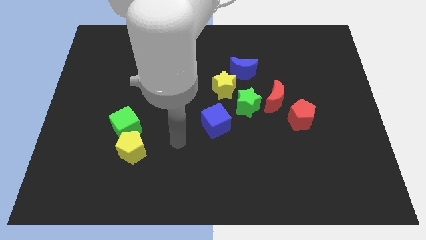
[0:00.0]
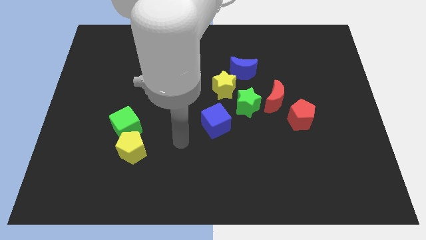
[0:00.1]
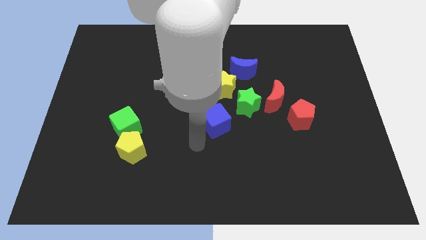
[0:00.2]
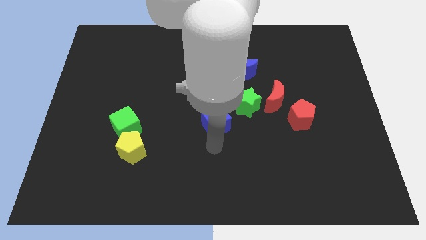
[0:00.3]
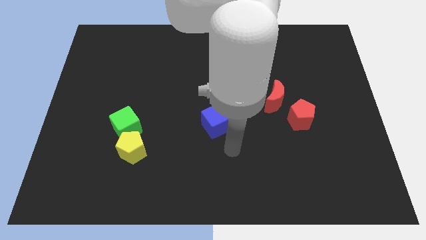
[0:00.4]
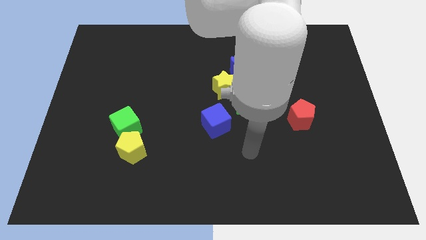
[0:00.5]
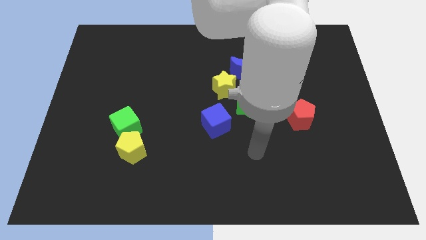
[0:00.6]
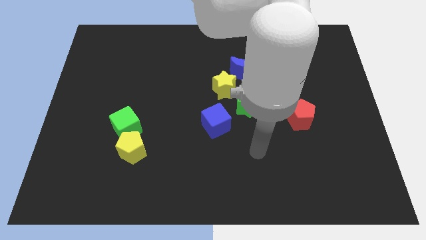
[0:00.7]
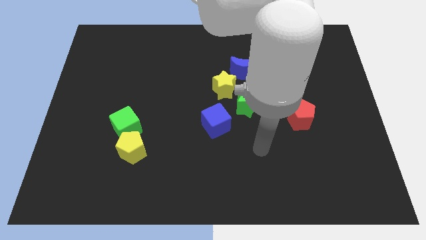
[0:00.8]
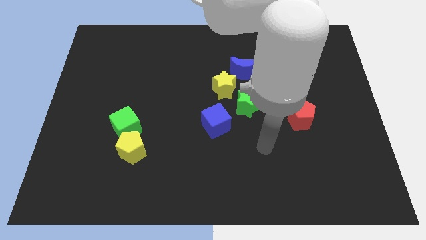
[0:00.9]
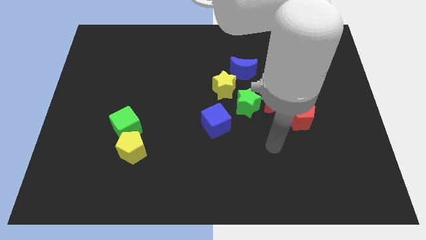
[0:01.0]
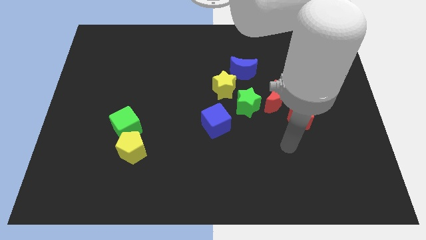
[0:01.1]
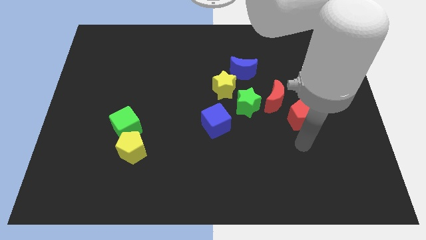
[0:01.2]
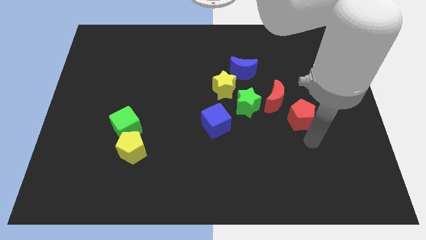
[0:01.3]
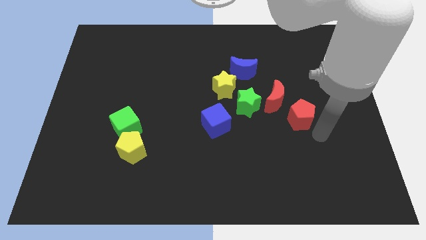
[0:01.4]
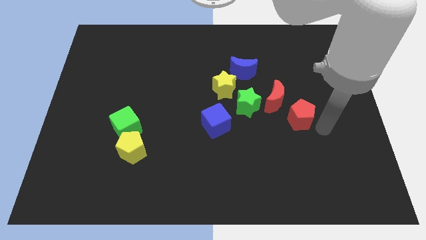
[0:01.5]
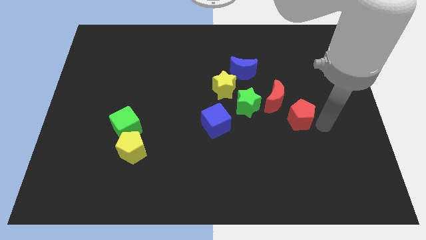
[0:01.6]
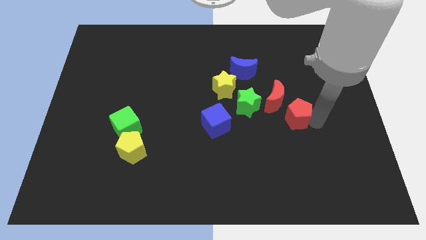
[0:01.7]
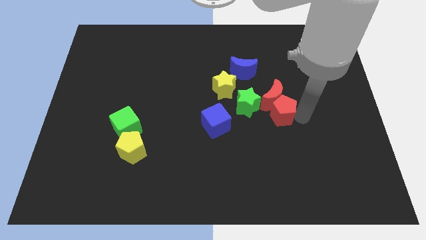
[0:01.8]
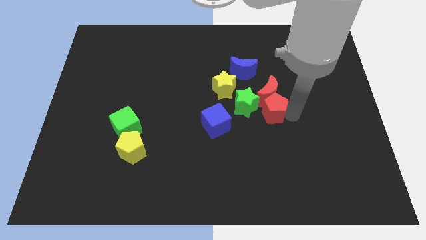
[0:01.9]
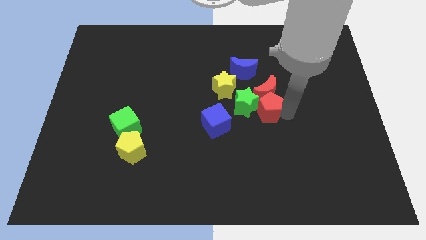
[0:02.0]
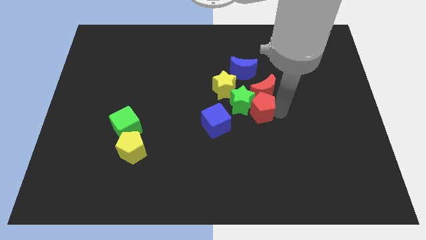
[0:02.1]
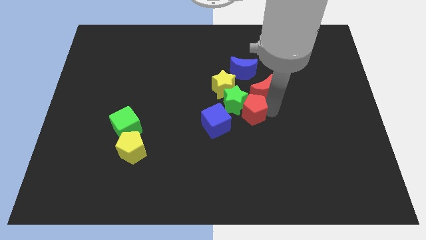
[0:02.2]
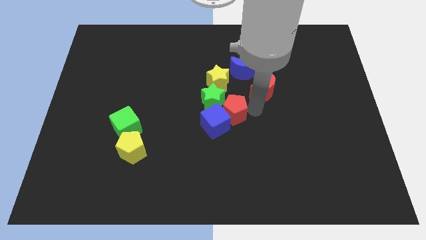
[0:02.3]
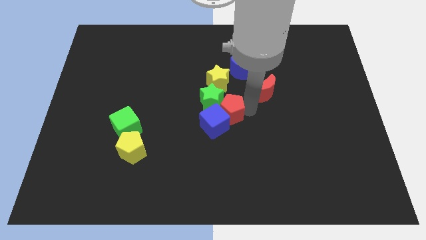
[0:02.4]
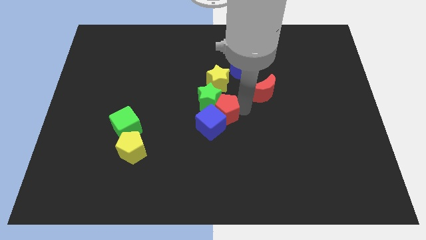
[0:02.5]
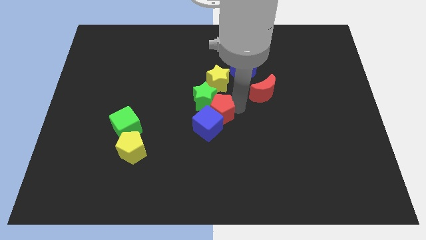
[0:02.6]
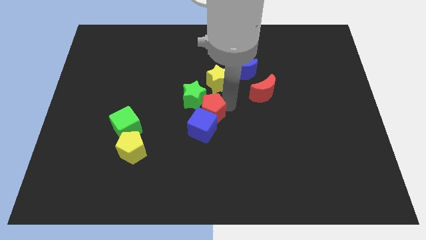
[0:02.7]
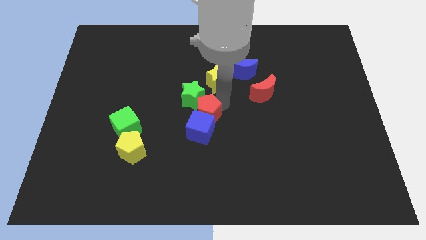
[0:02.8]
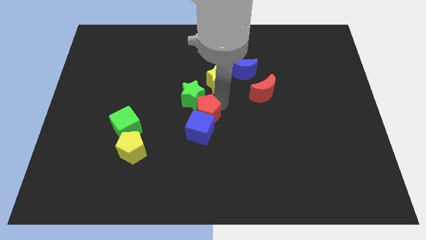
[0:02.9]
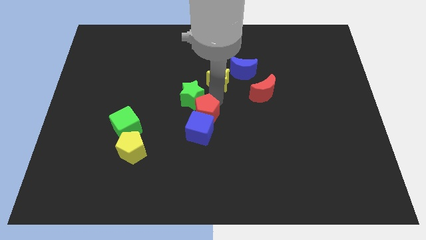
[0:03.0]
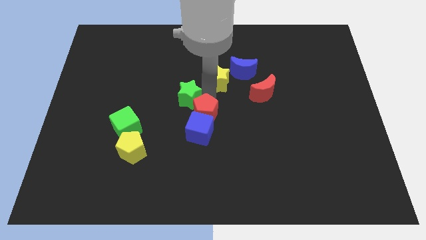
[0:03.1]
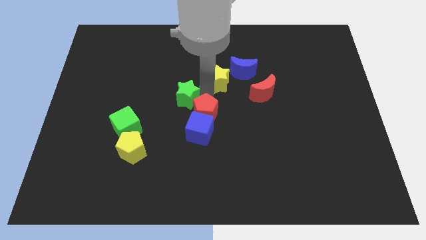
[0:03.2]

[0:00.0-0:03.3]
move the red pentagon above to the blue cube

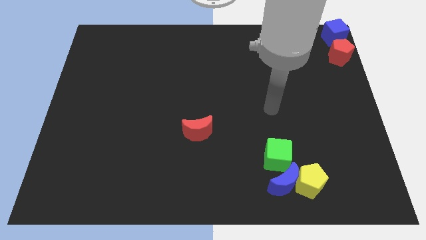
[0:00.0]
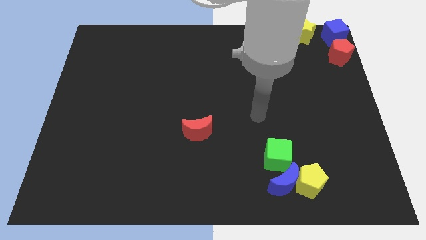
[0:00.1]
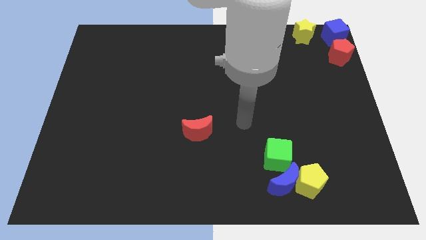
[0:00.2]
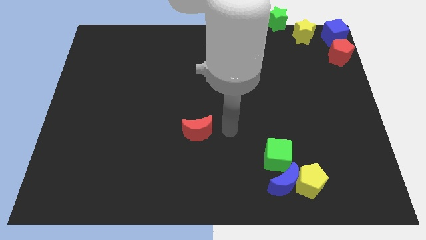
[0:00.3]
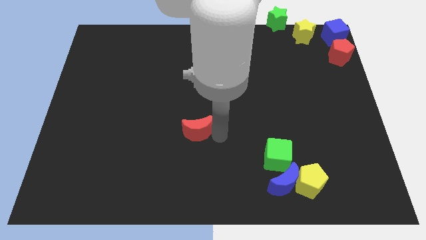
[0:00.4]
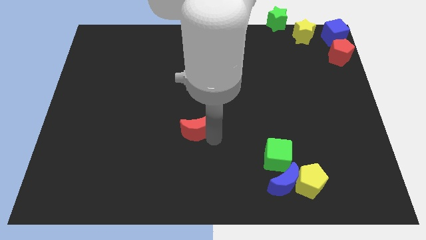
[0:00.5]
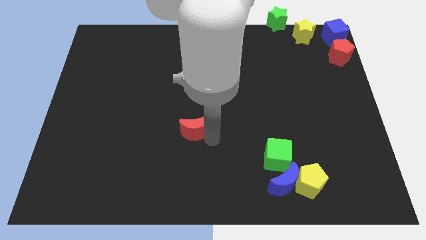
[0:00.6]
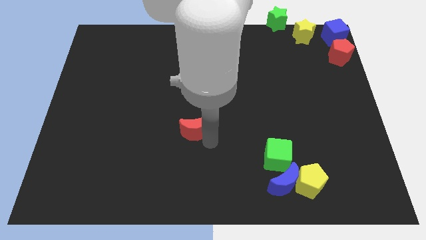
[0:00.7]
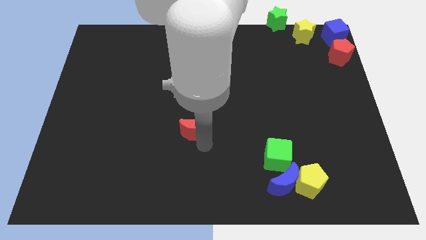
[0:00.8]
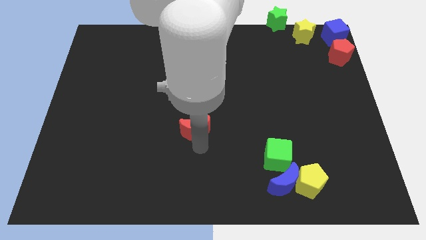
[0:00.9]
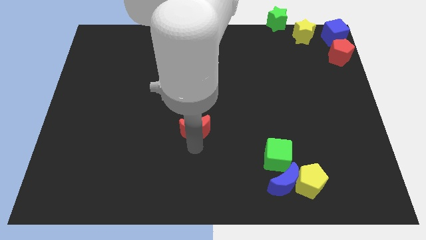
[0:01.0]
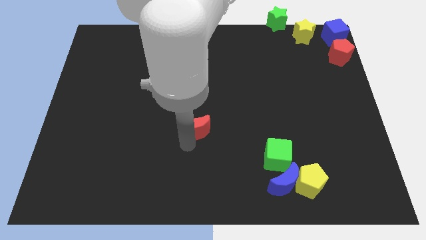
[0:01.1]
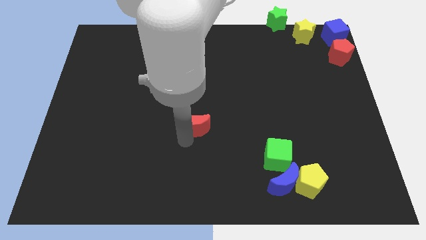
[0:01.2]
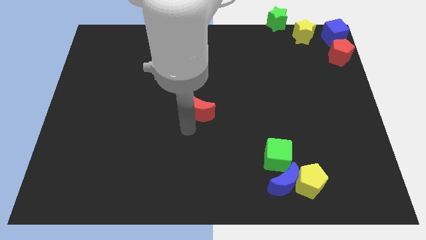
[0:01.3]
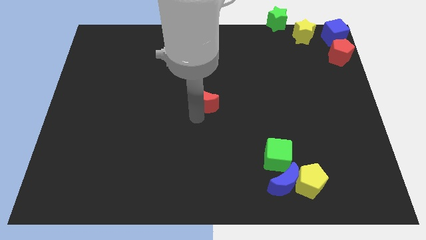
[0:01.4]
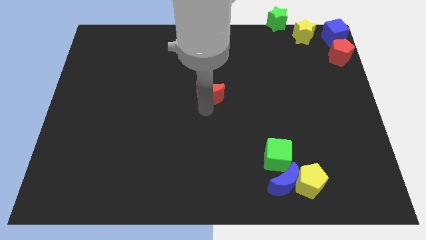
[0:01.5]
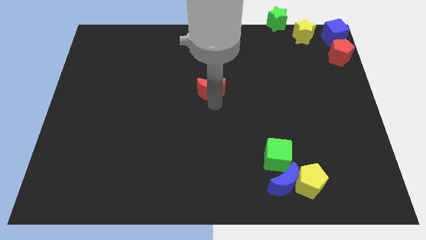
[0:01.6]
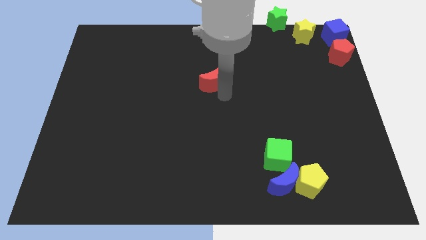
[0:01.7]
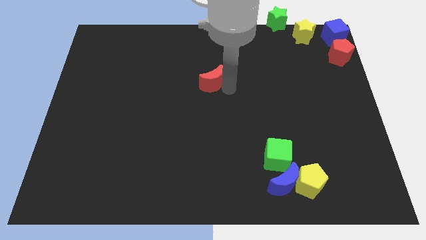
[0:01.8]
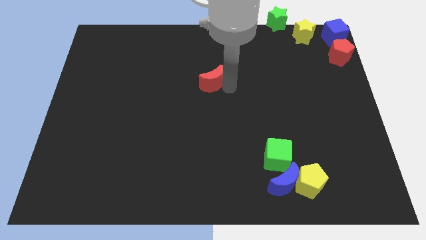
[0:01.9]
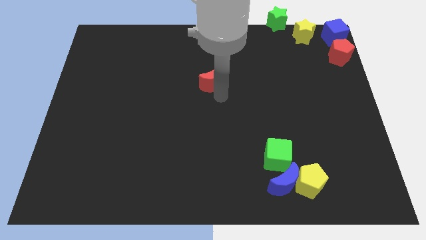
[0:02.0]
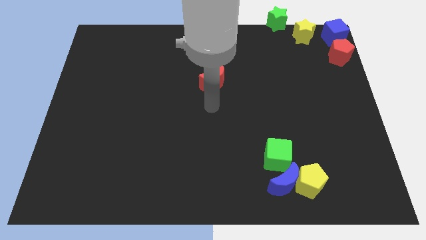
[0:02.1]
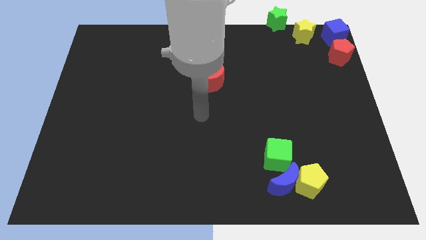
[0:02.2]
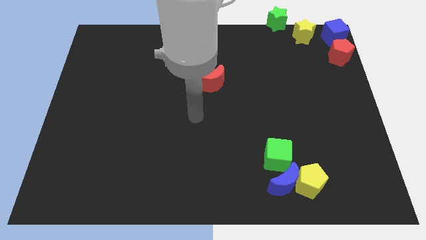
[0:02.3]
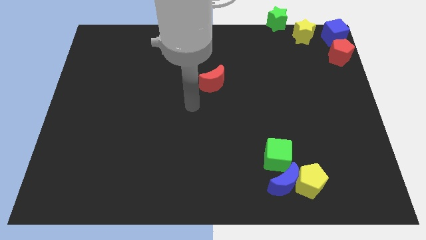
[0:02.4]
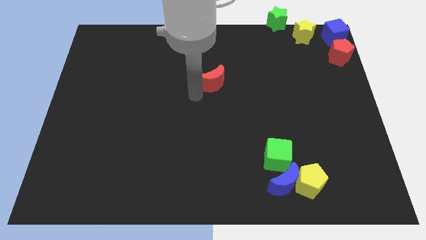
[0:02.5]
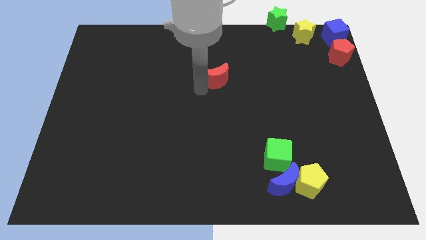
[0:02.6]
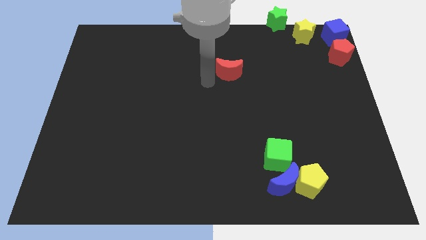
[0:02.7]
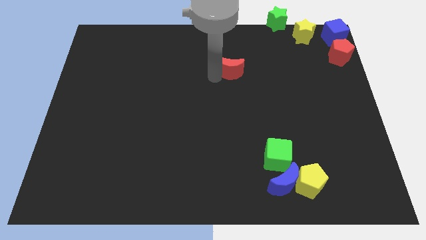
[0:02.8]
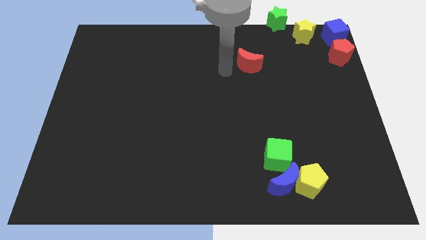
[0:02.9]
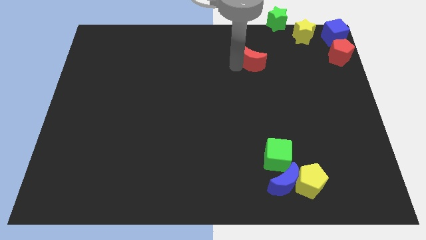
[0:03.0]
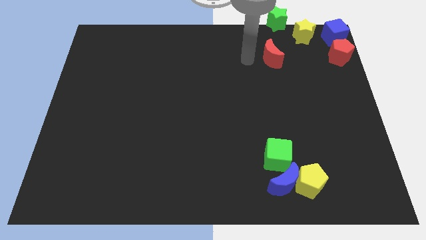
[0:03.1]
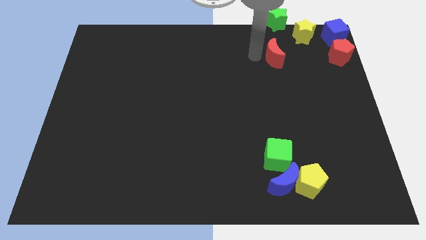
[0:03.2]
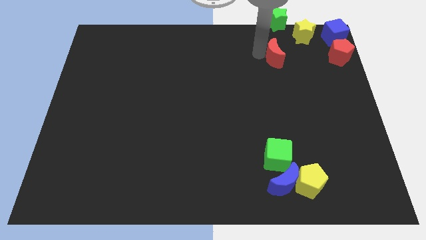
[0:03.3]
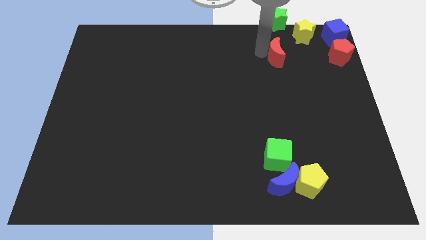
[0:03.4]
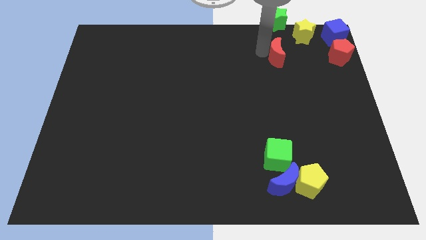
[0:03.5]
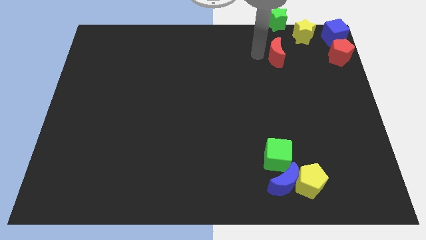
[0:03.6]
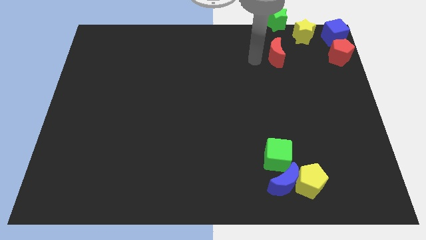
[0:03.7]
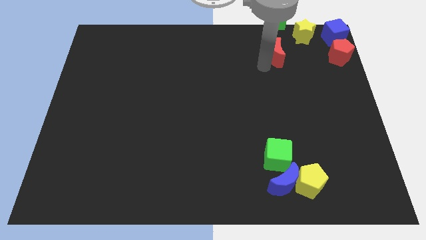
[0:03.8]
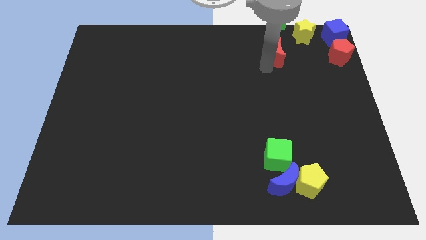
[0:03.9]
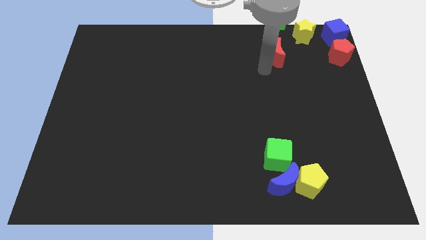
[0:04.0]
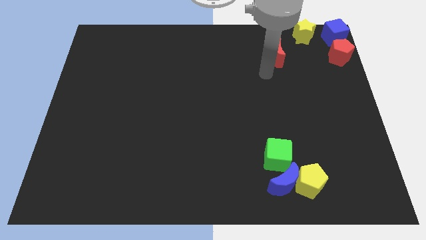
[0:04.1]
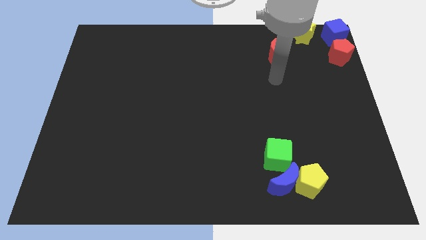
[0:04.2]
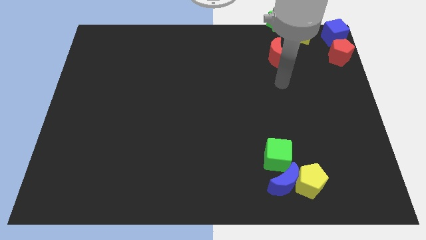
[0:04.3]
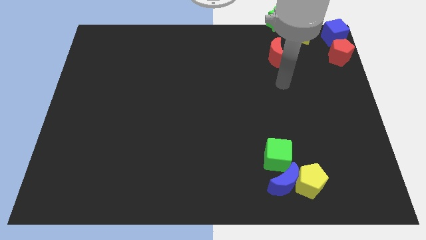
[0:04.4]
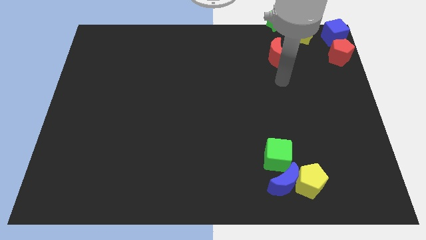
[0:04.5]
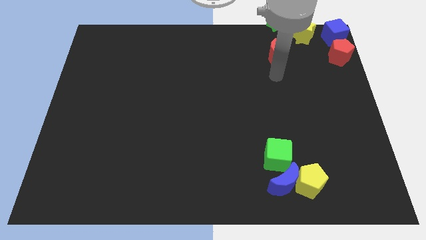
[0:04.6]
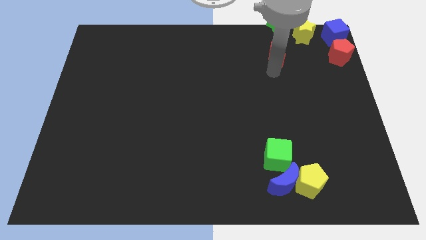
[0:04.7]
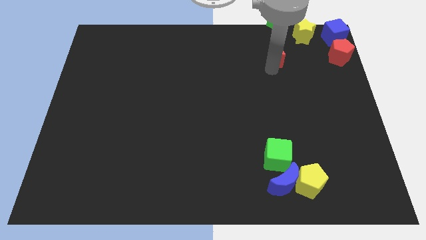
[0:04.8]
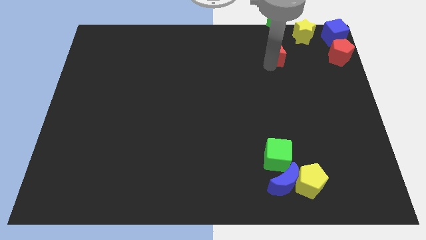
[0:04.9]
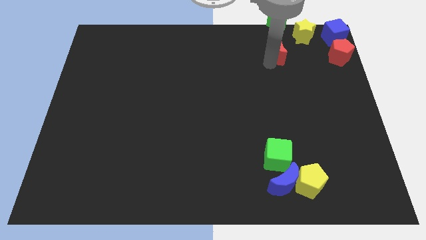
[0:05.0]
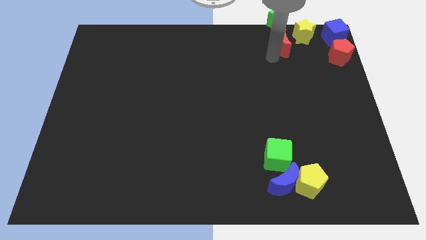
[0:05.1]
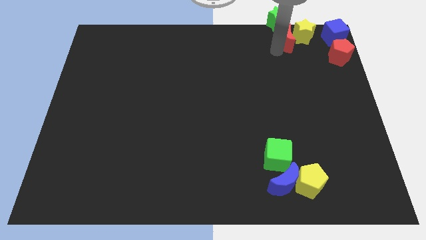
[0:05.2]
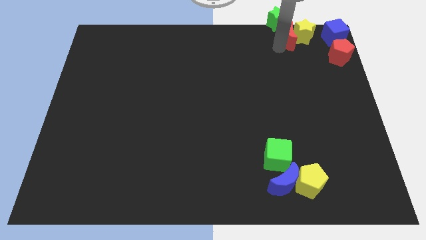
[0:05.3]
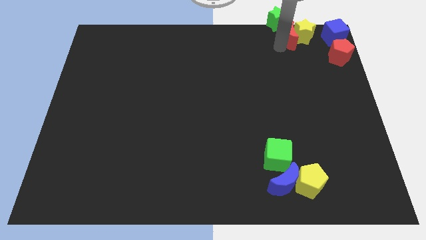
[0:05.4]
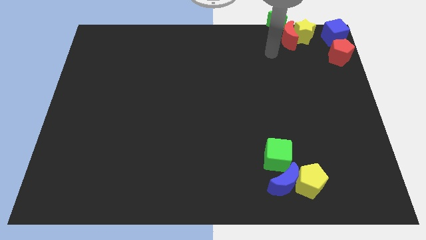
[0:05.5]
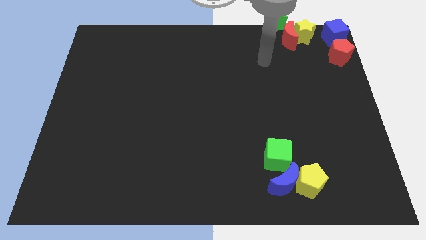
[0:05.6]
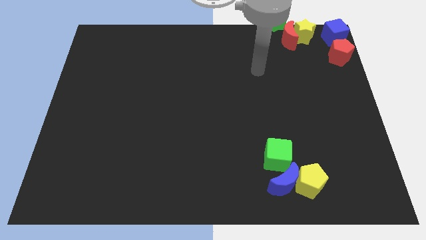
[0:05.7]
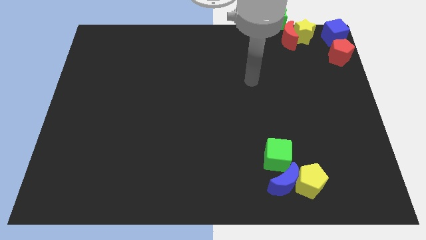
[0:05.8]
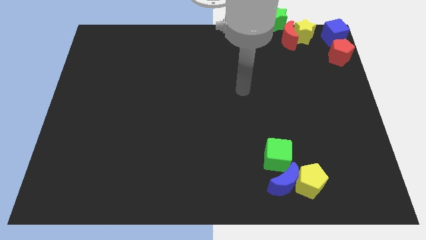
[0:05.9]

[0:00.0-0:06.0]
push the red crescent into the yellow star
